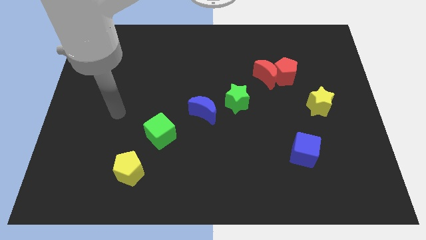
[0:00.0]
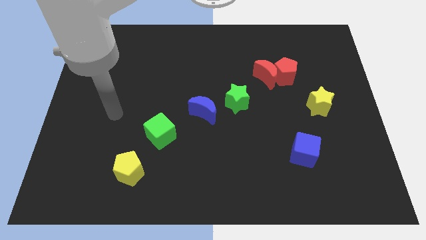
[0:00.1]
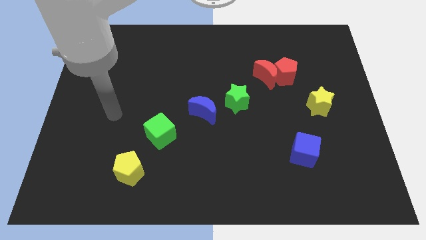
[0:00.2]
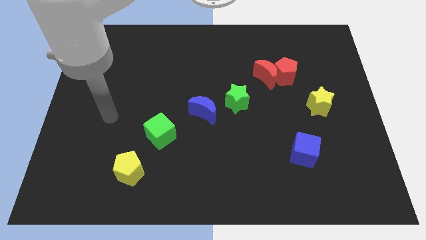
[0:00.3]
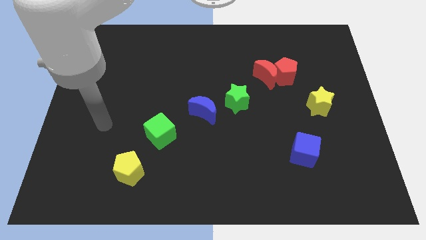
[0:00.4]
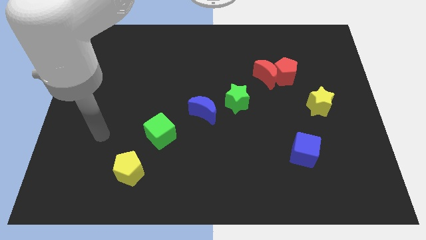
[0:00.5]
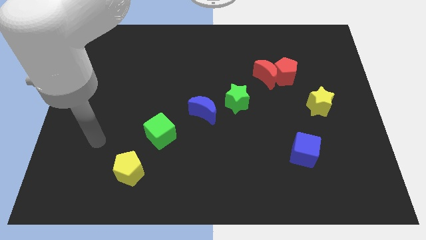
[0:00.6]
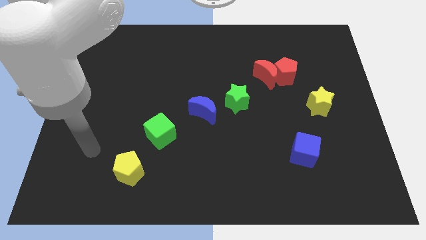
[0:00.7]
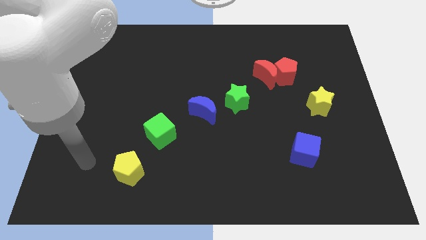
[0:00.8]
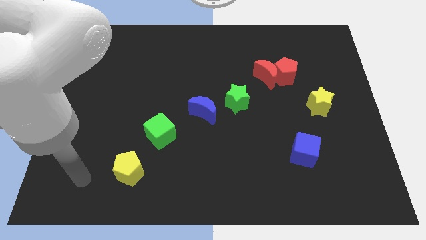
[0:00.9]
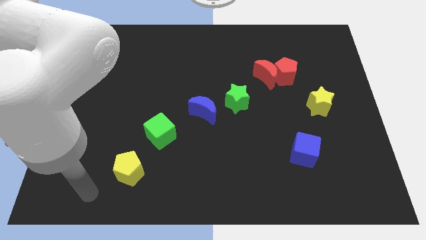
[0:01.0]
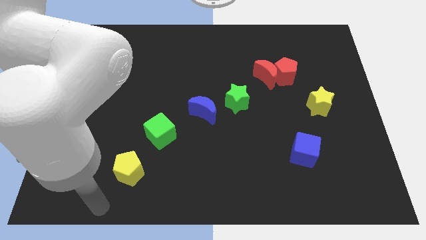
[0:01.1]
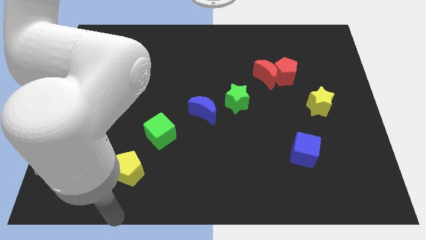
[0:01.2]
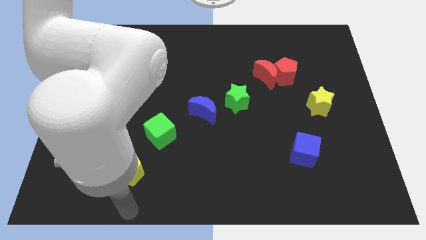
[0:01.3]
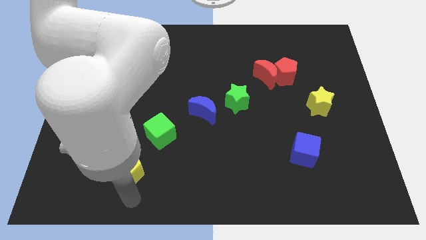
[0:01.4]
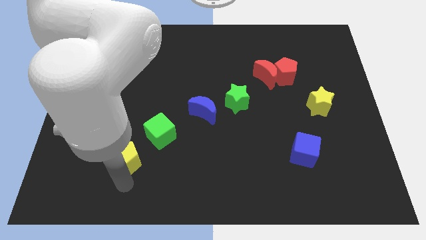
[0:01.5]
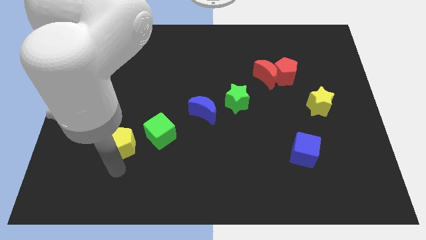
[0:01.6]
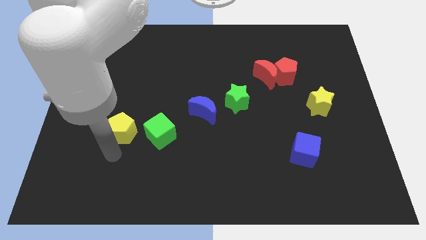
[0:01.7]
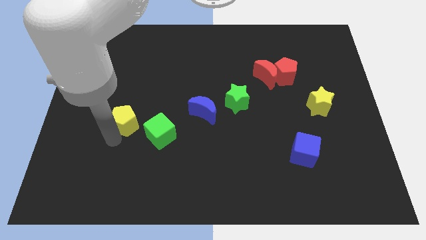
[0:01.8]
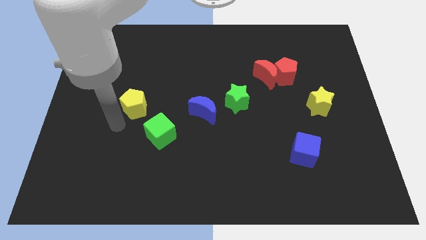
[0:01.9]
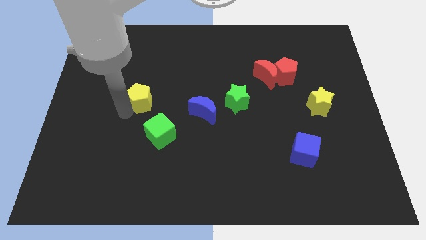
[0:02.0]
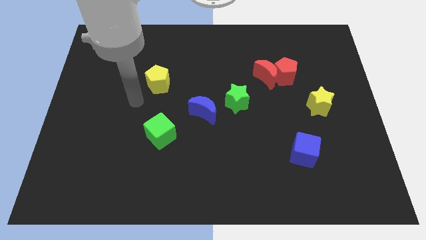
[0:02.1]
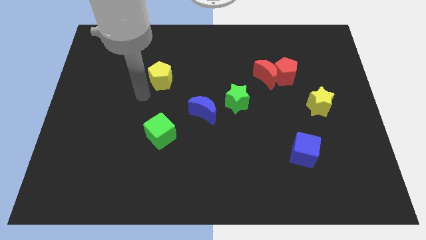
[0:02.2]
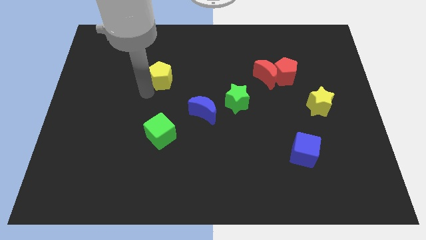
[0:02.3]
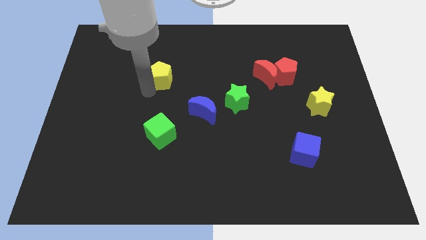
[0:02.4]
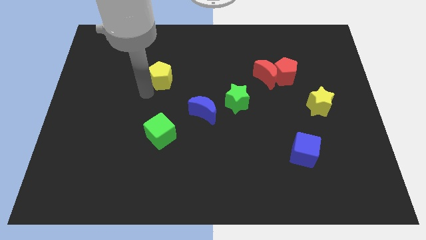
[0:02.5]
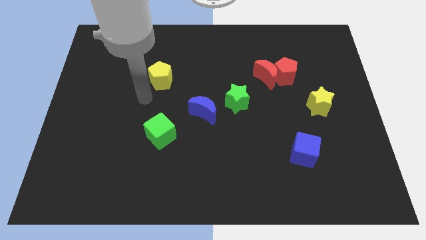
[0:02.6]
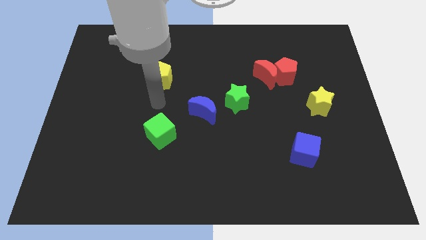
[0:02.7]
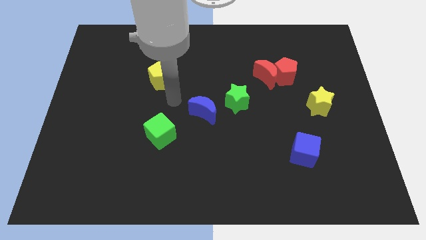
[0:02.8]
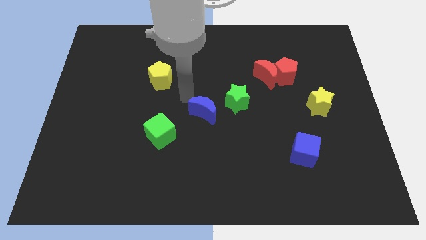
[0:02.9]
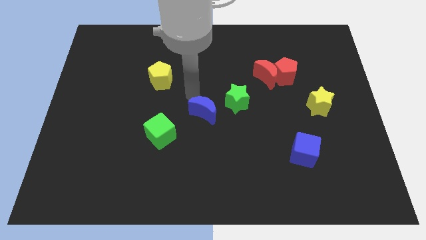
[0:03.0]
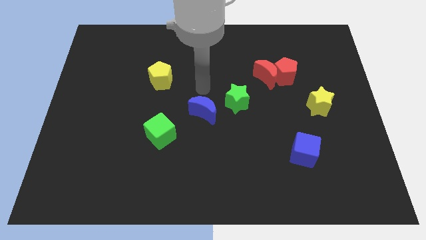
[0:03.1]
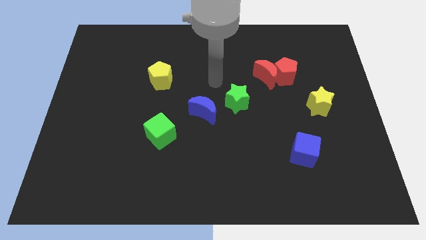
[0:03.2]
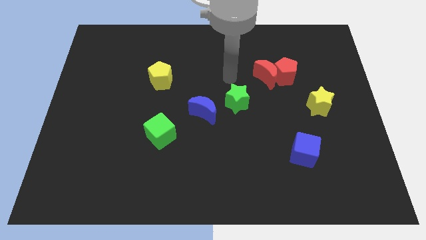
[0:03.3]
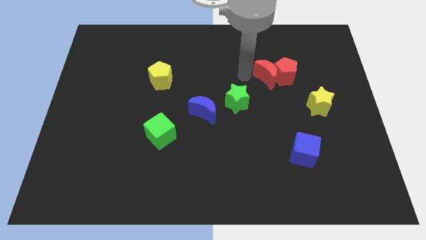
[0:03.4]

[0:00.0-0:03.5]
push the yellow pentagon diagonal to blue crescent

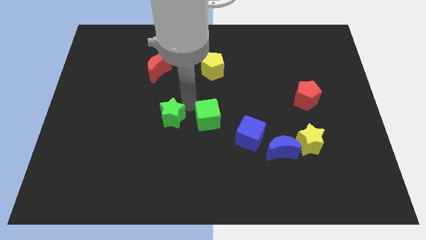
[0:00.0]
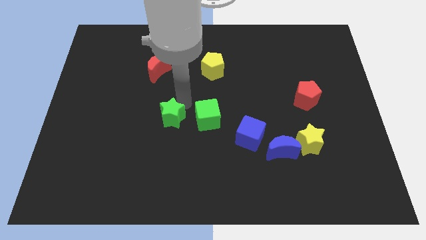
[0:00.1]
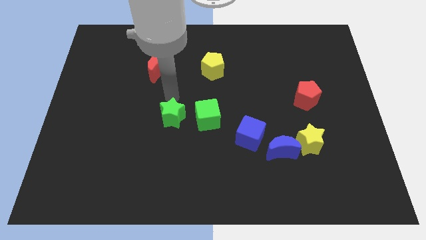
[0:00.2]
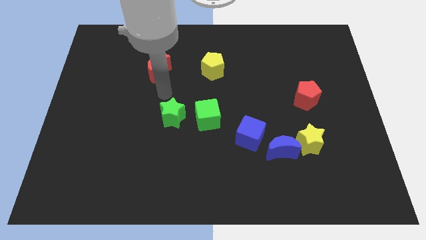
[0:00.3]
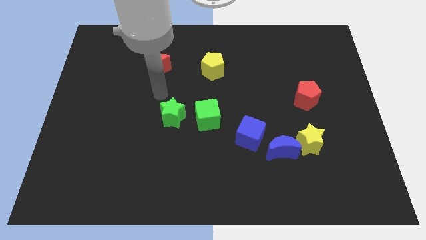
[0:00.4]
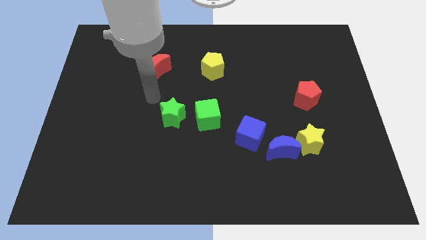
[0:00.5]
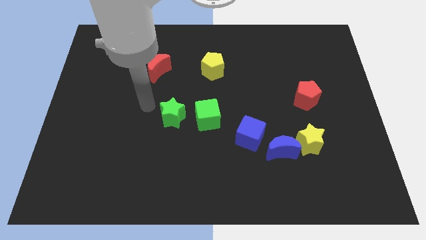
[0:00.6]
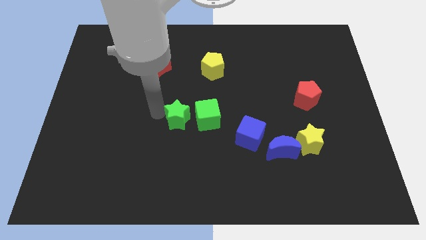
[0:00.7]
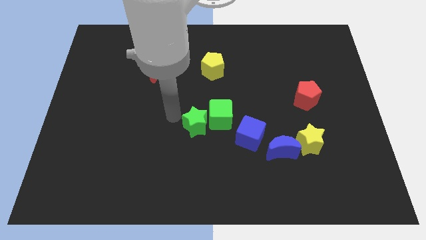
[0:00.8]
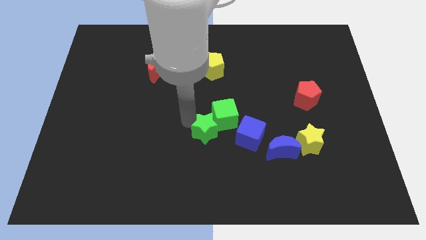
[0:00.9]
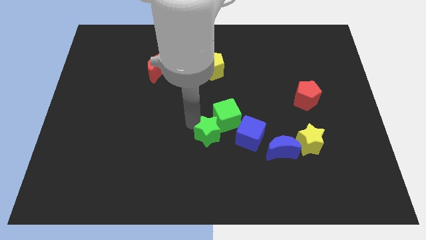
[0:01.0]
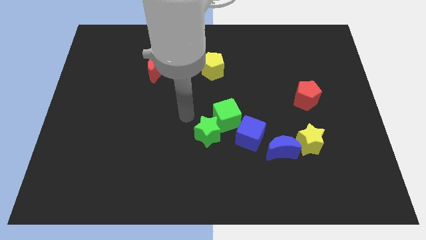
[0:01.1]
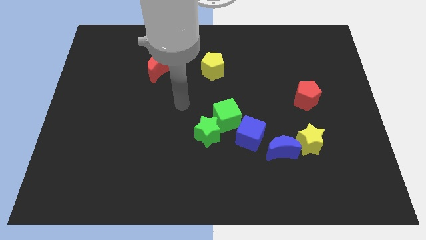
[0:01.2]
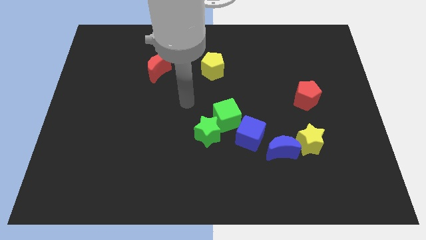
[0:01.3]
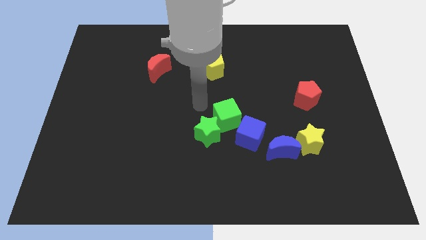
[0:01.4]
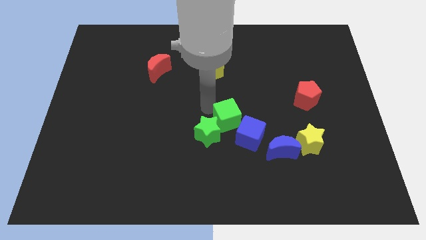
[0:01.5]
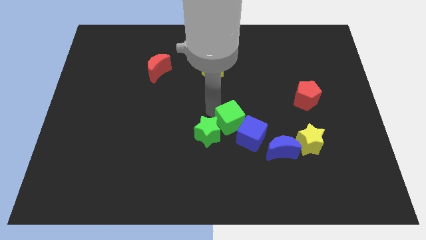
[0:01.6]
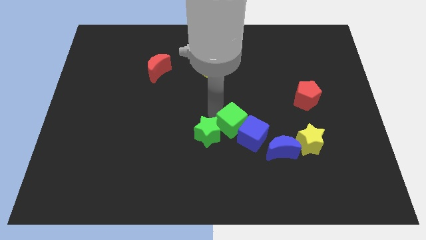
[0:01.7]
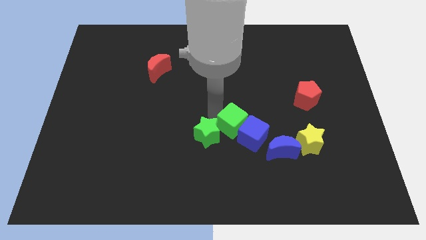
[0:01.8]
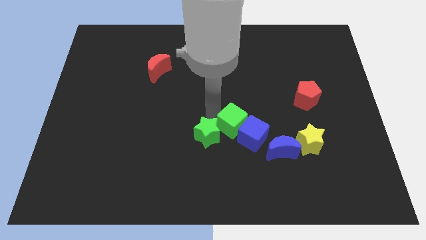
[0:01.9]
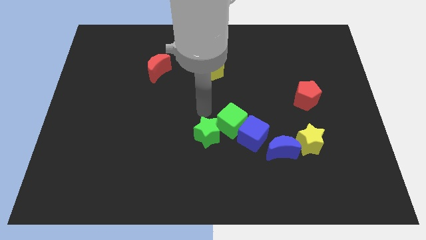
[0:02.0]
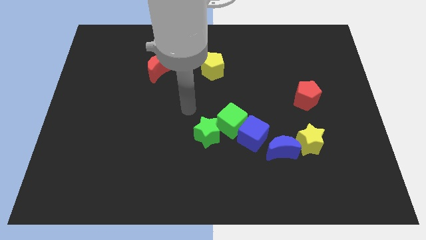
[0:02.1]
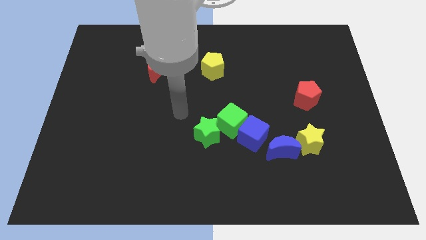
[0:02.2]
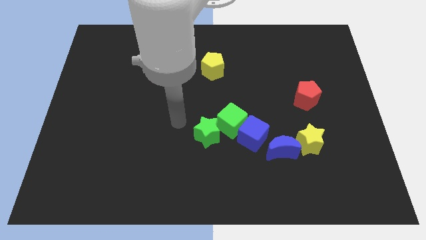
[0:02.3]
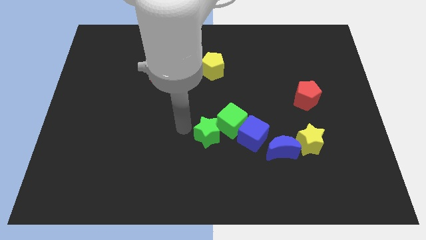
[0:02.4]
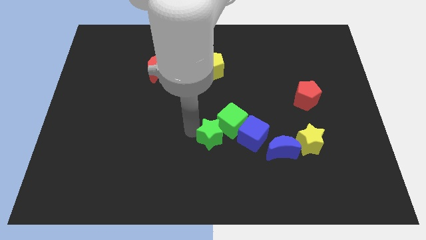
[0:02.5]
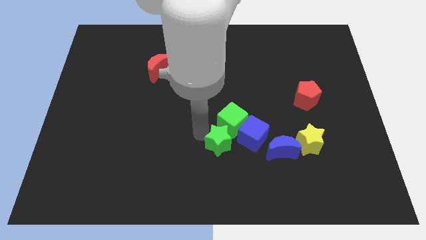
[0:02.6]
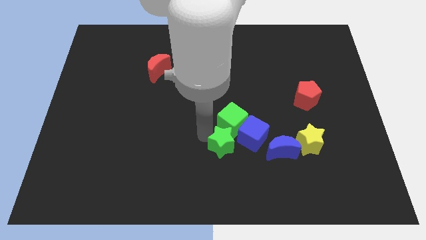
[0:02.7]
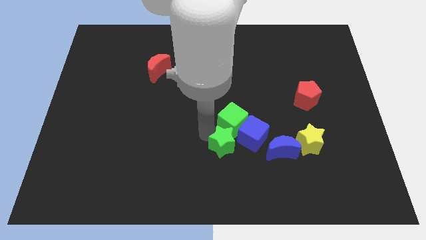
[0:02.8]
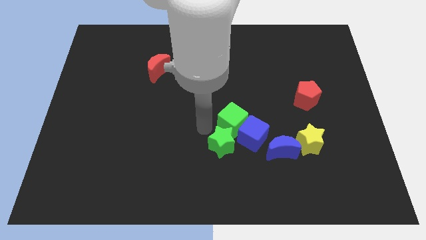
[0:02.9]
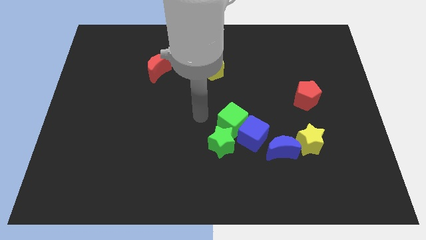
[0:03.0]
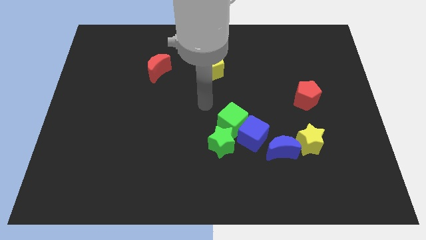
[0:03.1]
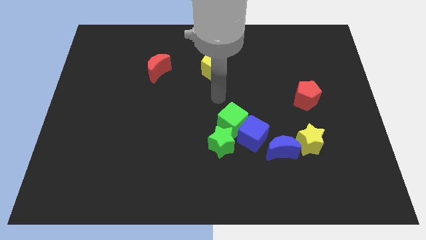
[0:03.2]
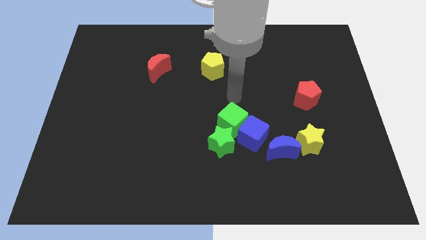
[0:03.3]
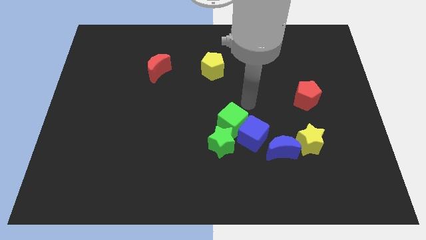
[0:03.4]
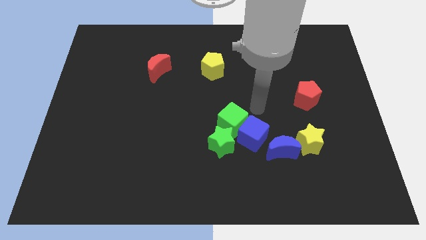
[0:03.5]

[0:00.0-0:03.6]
move the green star to the bottom of the green cube

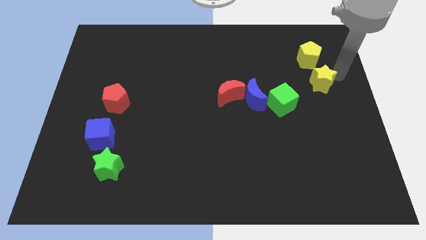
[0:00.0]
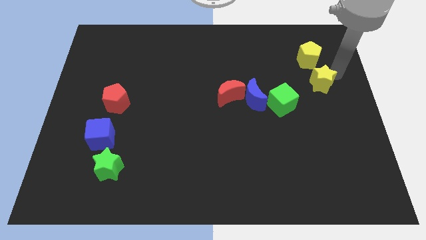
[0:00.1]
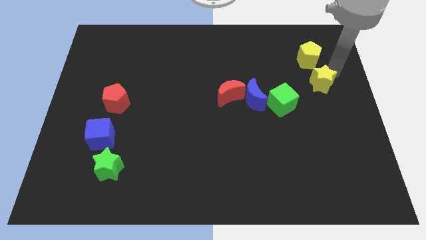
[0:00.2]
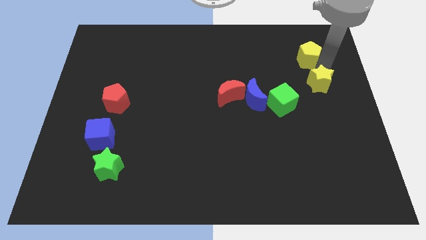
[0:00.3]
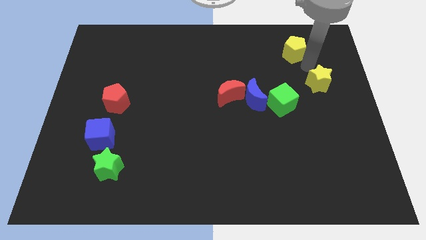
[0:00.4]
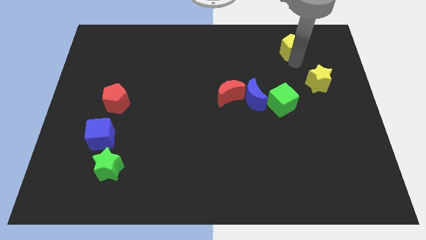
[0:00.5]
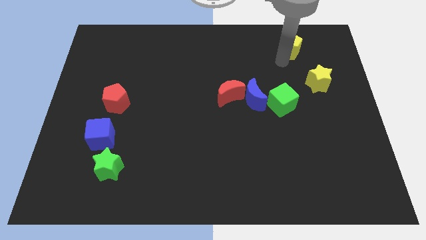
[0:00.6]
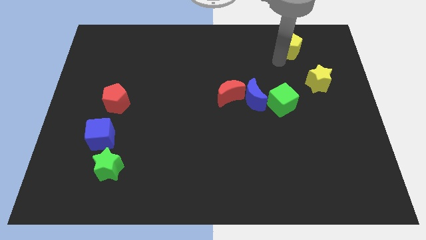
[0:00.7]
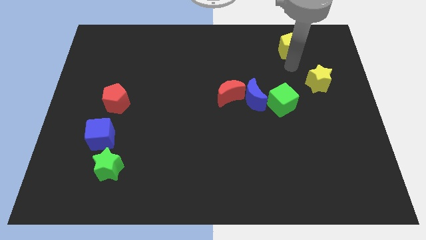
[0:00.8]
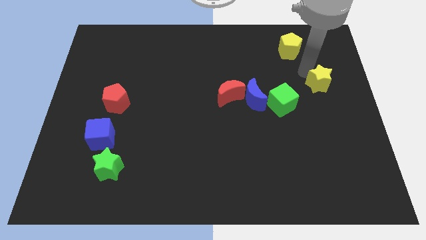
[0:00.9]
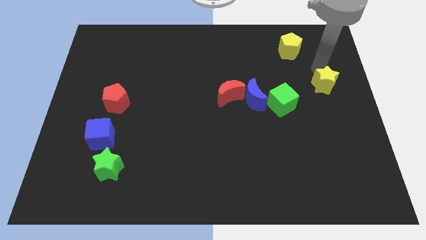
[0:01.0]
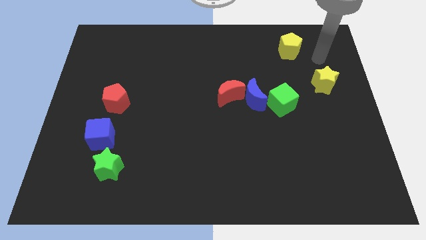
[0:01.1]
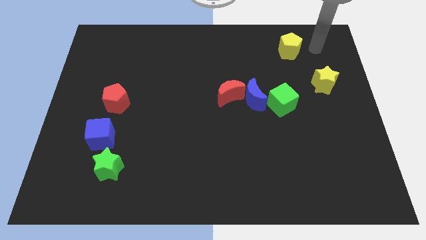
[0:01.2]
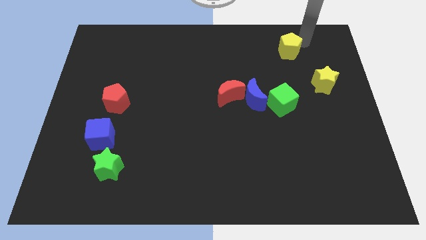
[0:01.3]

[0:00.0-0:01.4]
move yellow pentagon slightly up

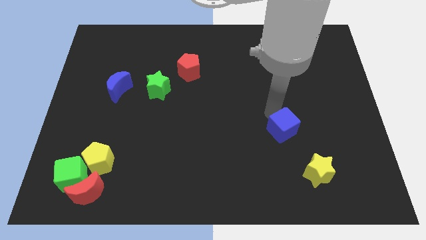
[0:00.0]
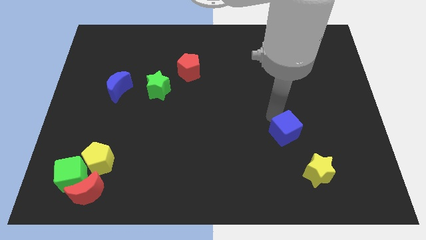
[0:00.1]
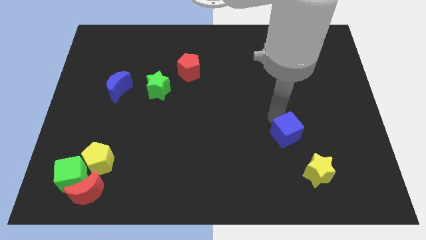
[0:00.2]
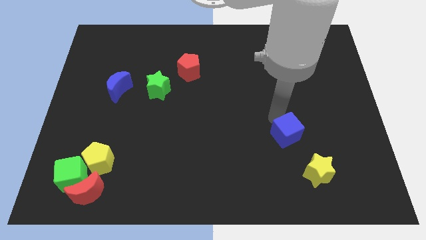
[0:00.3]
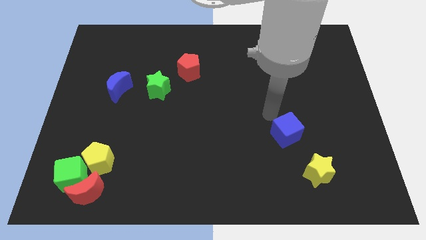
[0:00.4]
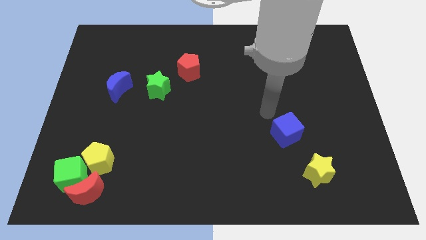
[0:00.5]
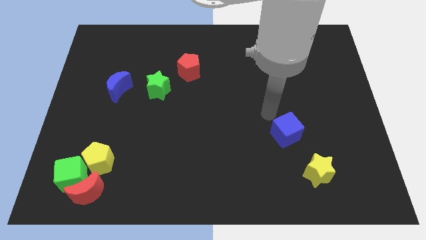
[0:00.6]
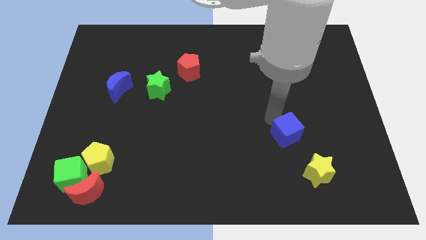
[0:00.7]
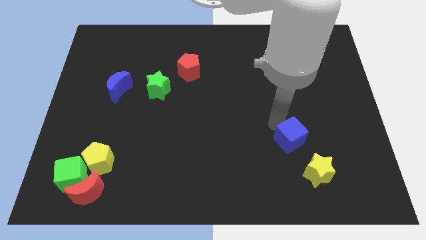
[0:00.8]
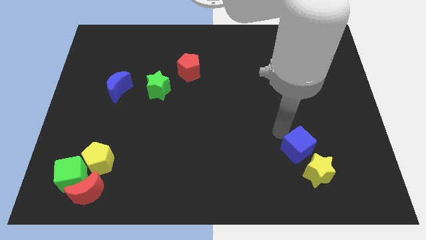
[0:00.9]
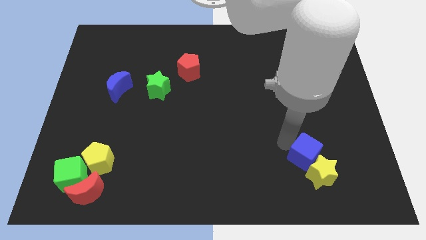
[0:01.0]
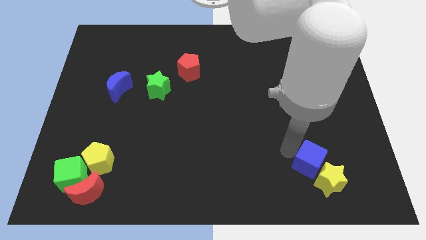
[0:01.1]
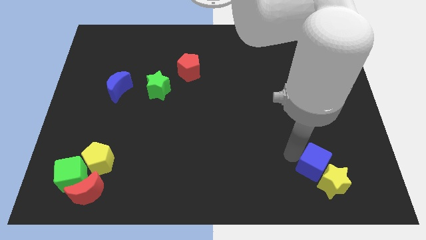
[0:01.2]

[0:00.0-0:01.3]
move the blue cube into the yellow star
